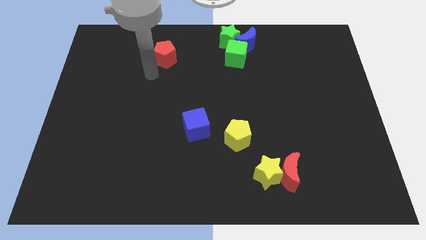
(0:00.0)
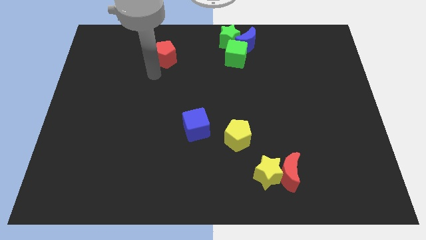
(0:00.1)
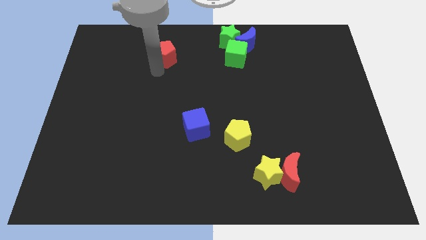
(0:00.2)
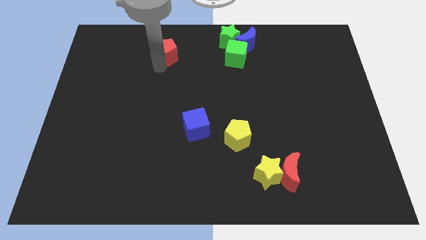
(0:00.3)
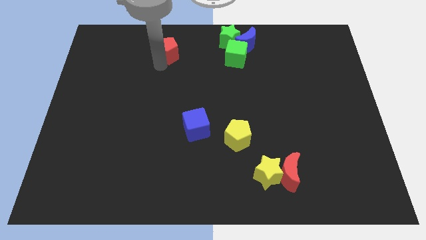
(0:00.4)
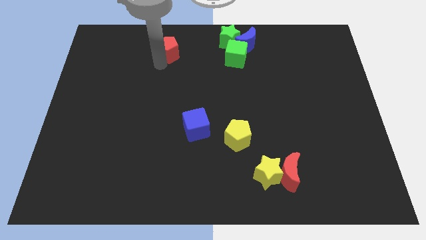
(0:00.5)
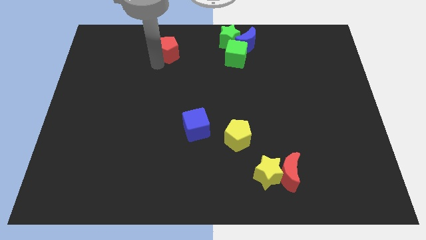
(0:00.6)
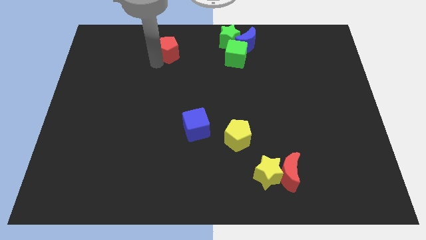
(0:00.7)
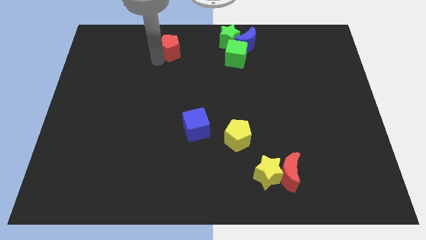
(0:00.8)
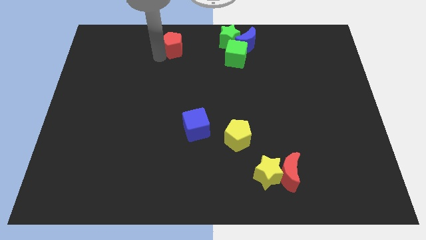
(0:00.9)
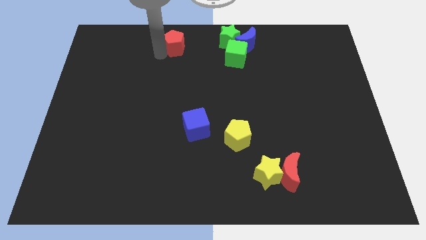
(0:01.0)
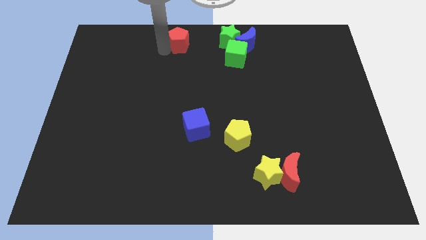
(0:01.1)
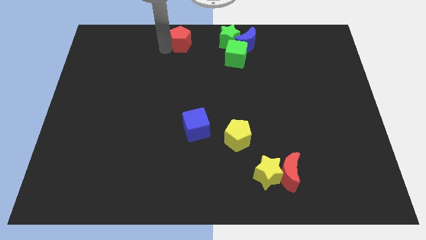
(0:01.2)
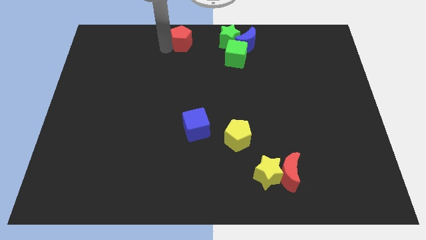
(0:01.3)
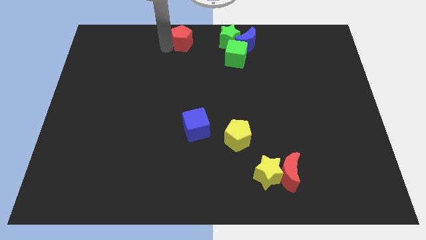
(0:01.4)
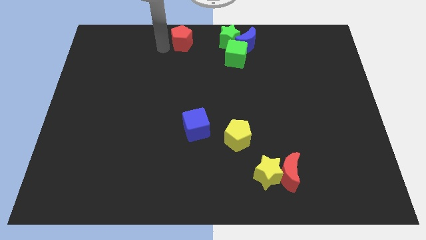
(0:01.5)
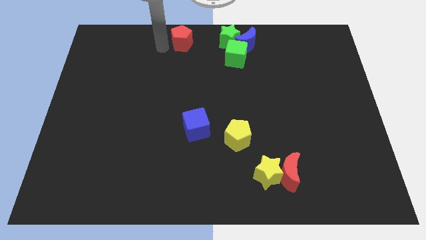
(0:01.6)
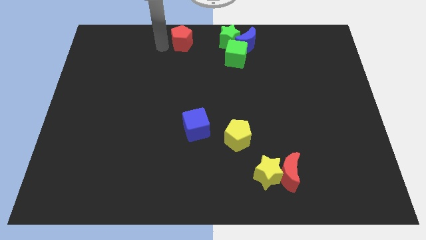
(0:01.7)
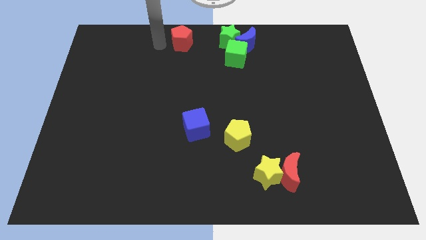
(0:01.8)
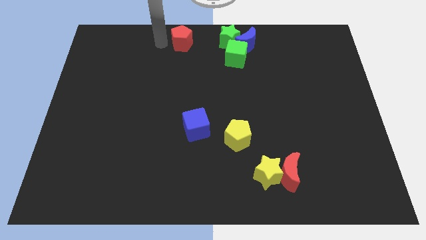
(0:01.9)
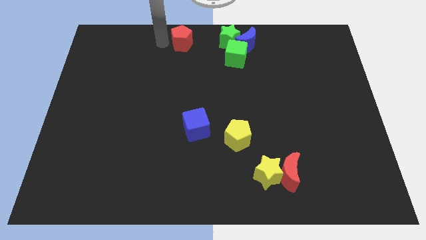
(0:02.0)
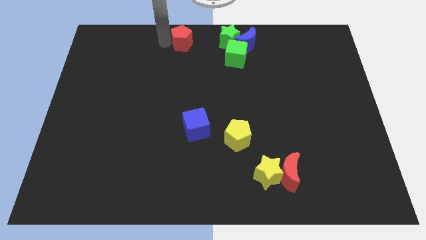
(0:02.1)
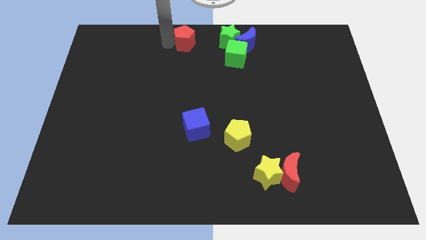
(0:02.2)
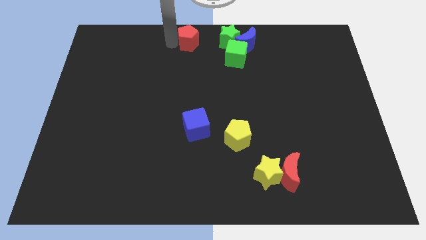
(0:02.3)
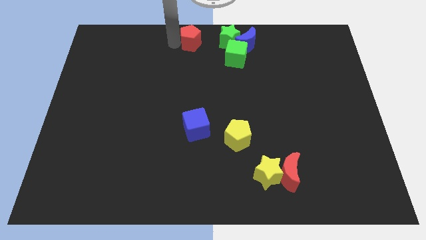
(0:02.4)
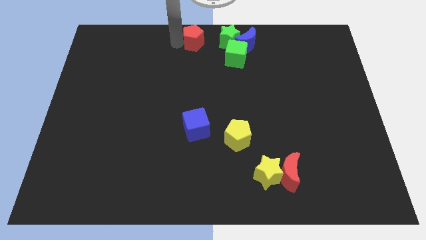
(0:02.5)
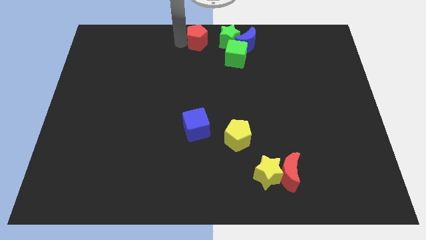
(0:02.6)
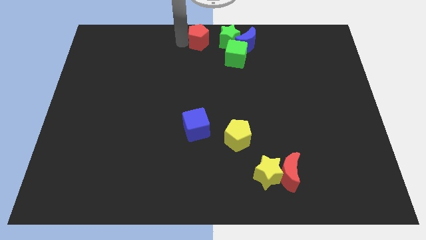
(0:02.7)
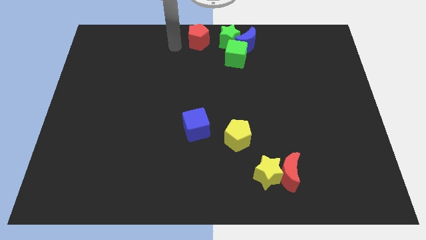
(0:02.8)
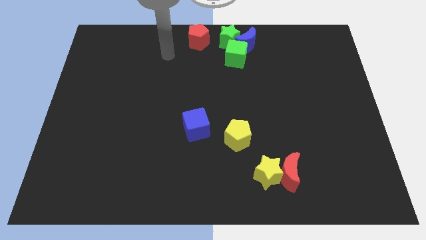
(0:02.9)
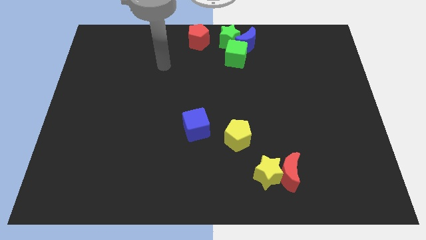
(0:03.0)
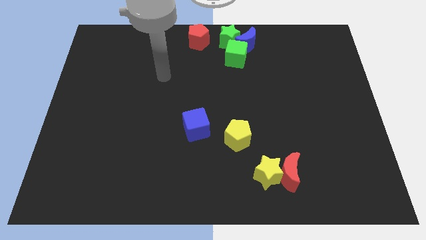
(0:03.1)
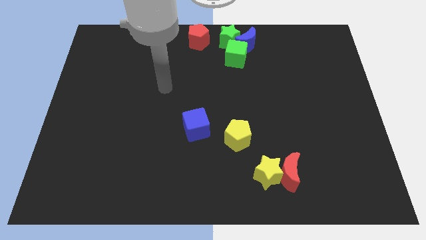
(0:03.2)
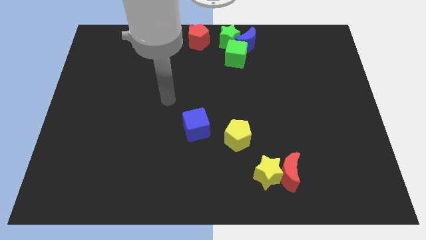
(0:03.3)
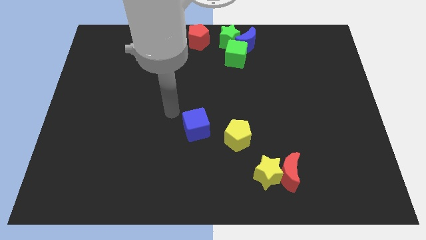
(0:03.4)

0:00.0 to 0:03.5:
place the red pentagon to the top center of the board

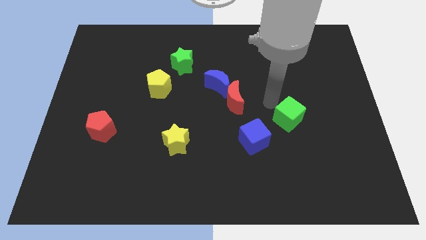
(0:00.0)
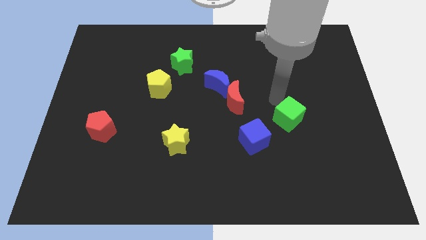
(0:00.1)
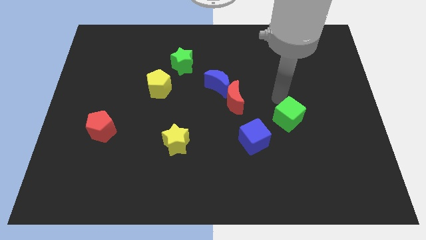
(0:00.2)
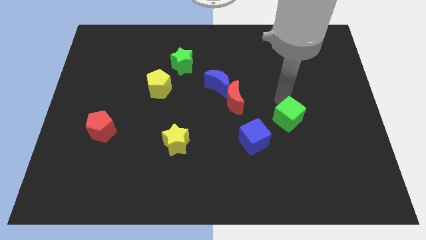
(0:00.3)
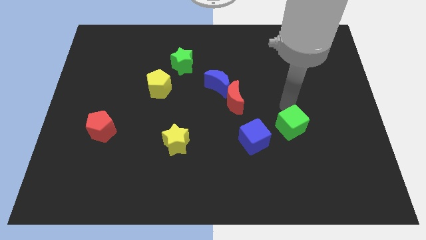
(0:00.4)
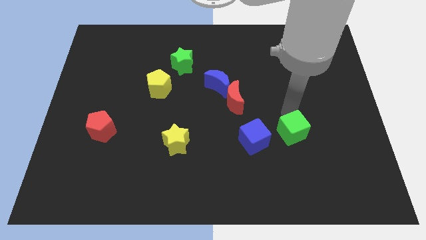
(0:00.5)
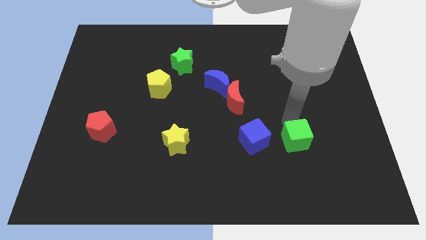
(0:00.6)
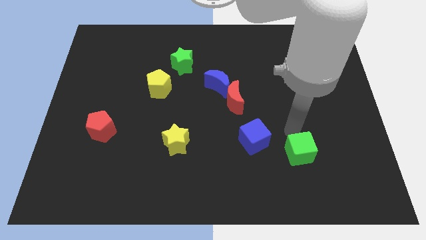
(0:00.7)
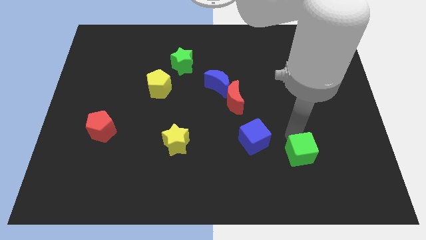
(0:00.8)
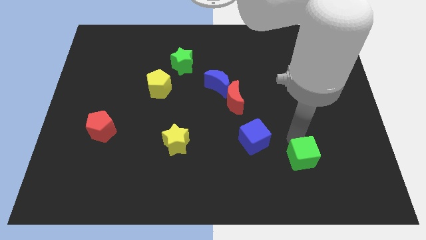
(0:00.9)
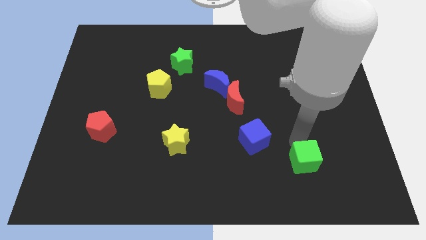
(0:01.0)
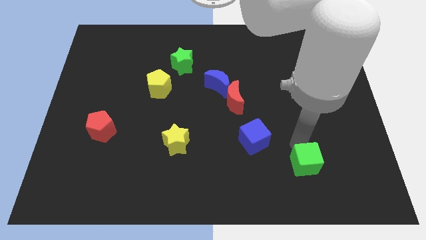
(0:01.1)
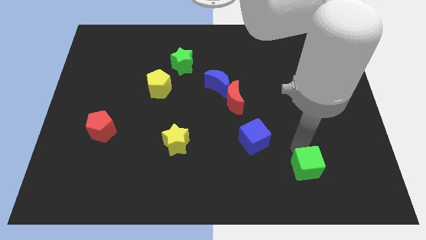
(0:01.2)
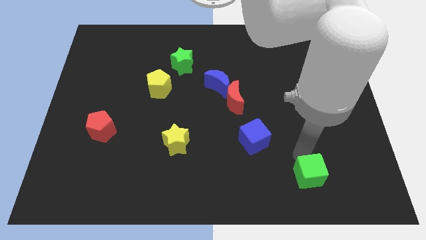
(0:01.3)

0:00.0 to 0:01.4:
push the green cube towards the bottom of the board

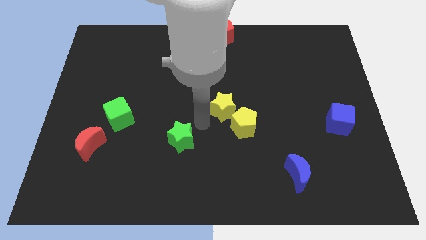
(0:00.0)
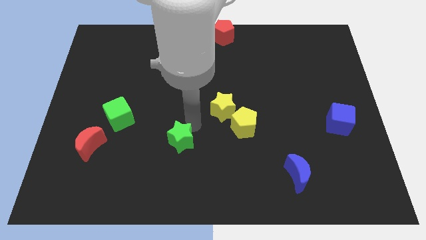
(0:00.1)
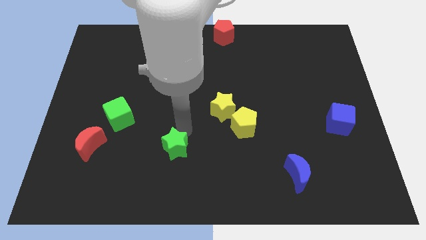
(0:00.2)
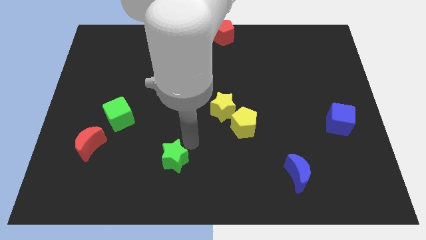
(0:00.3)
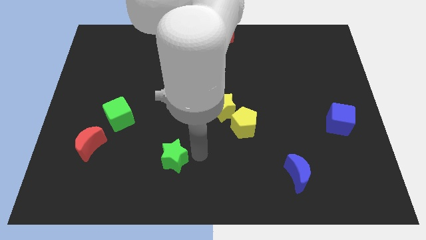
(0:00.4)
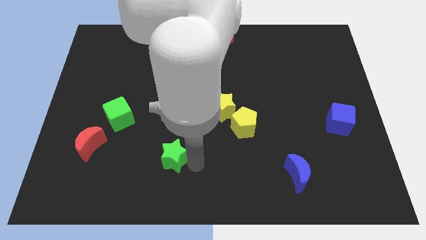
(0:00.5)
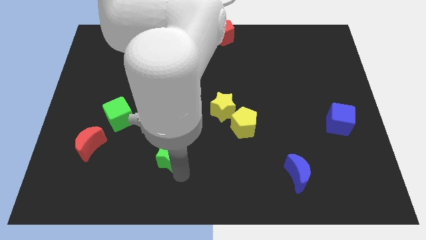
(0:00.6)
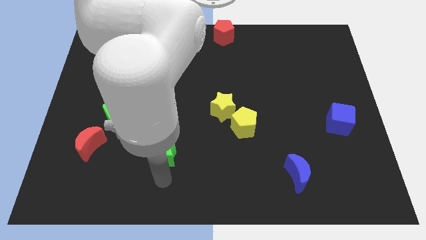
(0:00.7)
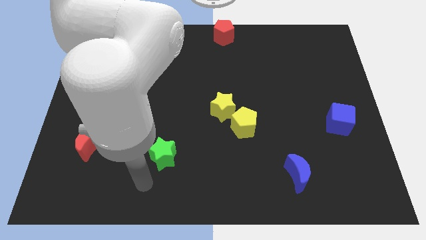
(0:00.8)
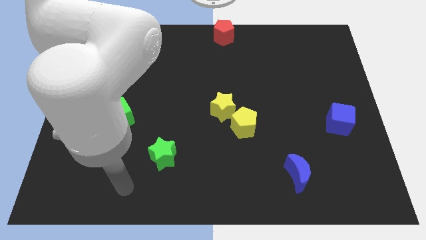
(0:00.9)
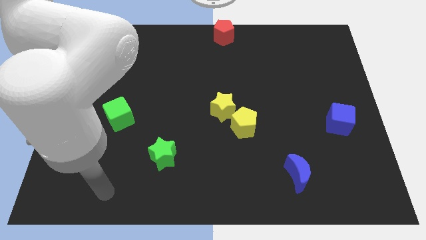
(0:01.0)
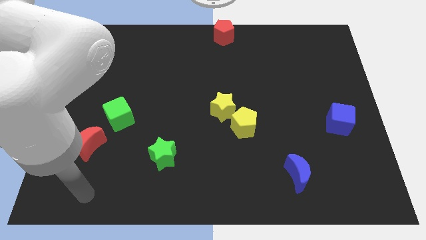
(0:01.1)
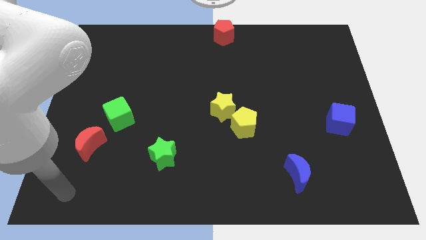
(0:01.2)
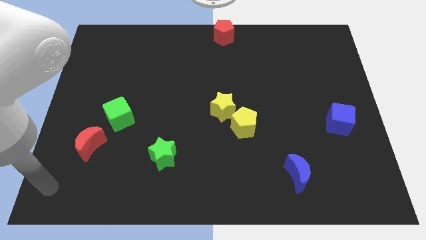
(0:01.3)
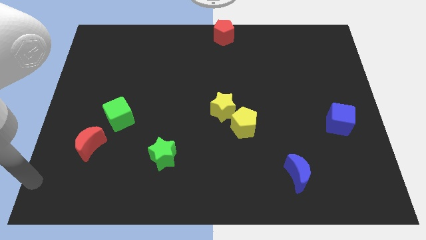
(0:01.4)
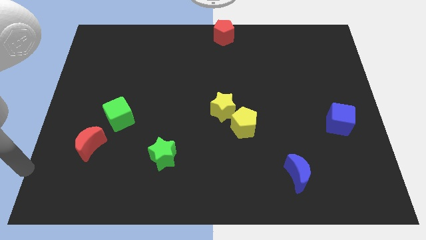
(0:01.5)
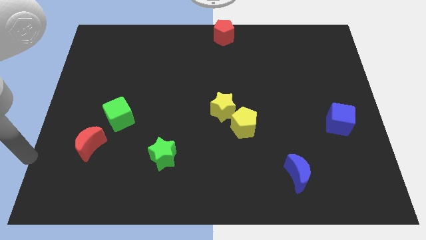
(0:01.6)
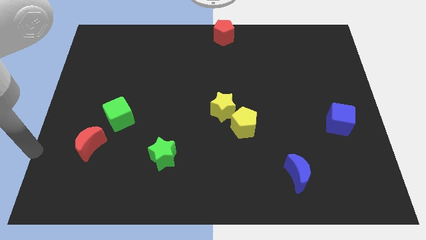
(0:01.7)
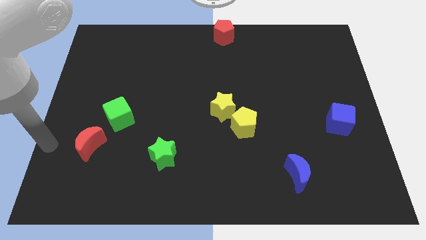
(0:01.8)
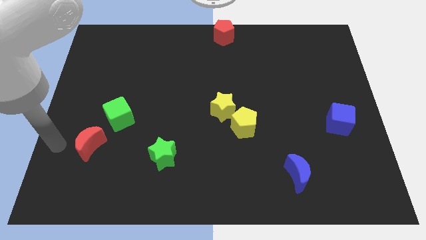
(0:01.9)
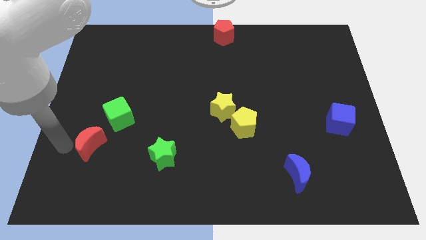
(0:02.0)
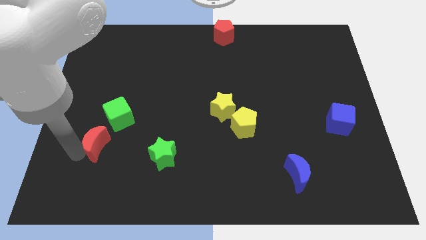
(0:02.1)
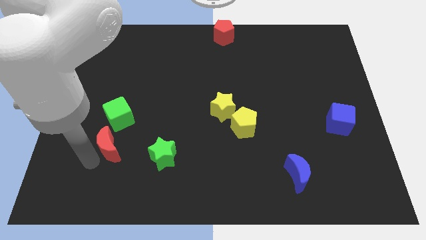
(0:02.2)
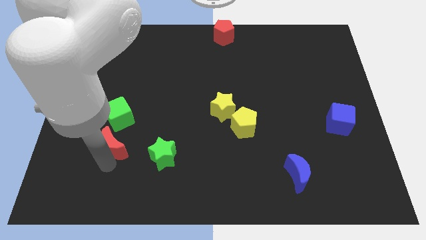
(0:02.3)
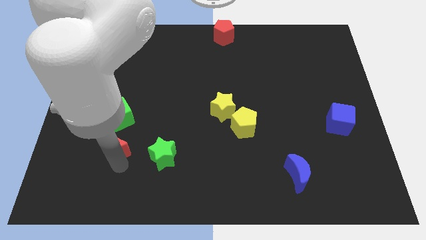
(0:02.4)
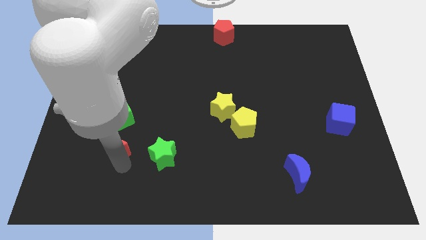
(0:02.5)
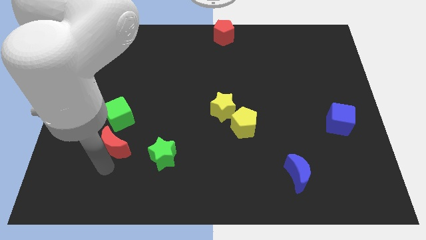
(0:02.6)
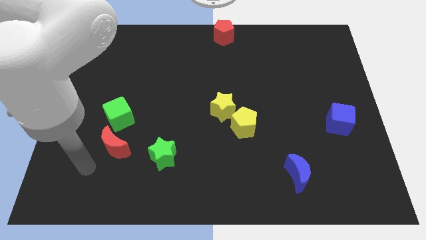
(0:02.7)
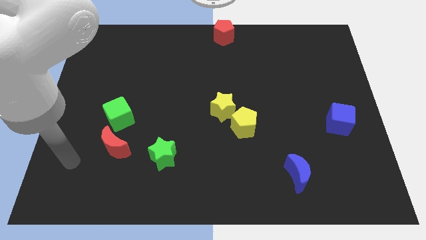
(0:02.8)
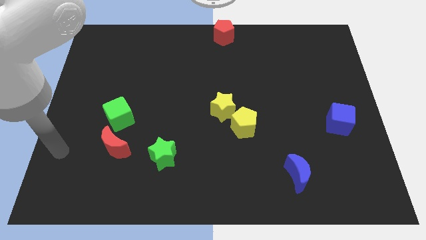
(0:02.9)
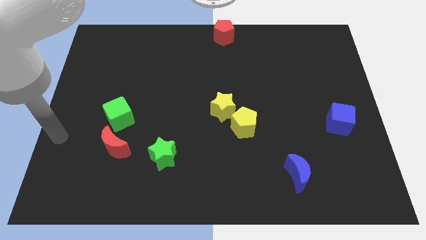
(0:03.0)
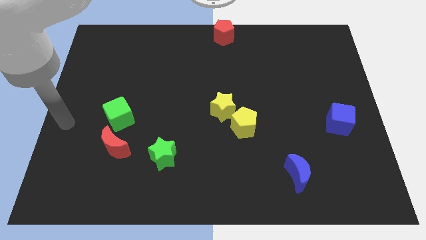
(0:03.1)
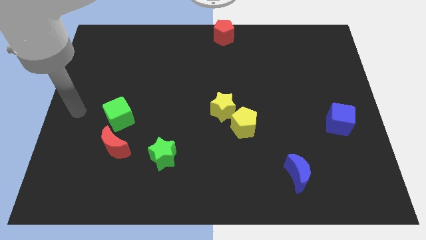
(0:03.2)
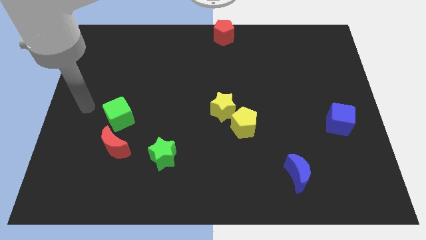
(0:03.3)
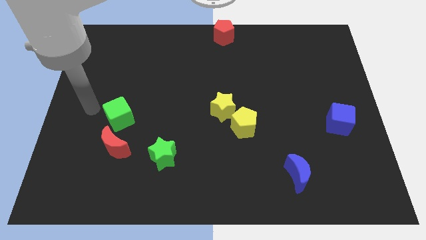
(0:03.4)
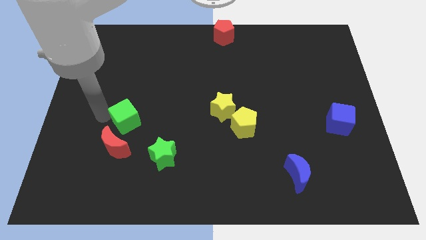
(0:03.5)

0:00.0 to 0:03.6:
place the green star and the red pentagon in a horizontal line

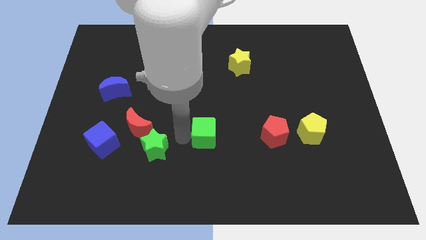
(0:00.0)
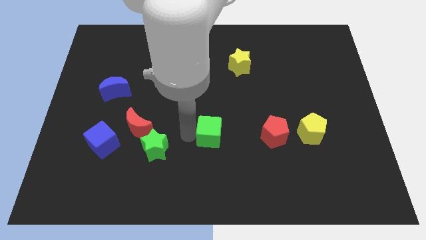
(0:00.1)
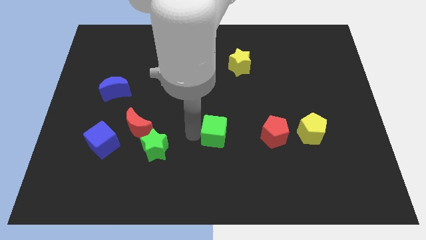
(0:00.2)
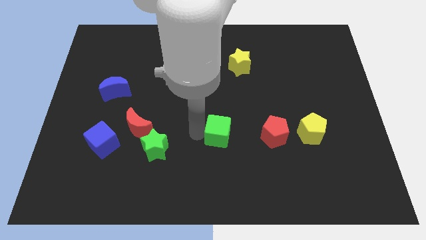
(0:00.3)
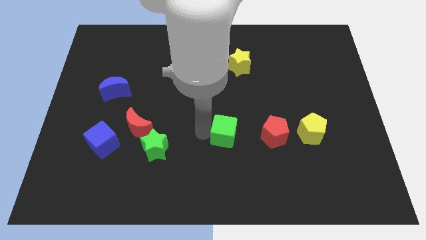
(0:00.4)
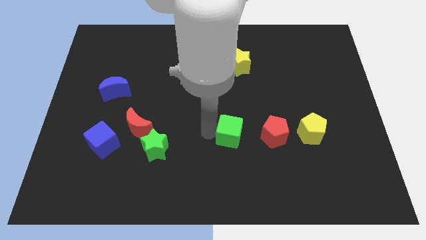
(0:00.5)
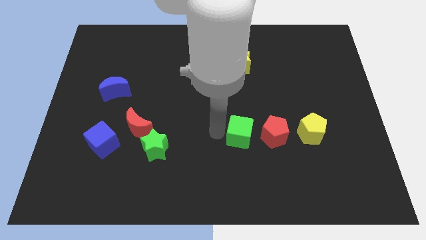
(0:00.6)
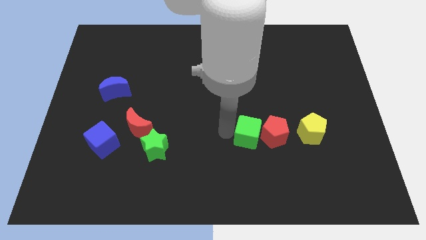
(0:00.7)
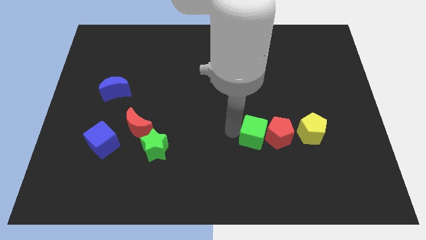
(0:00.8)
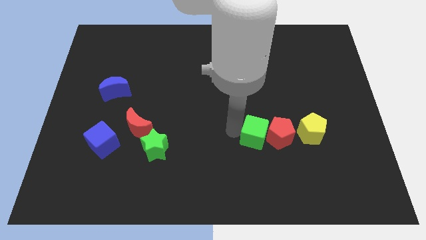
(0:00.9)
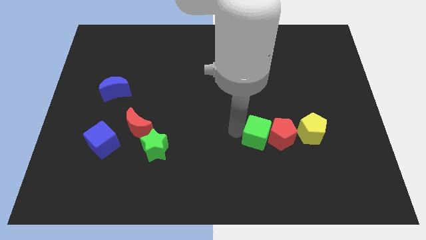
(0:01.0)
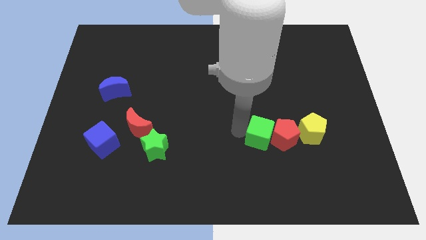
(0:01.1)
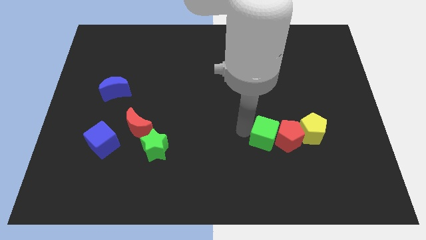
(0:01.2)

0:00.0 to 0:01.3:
push the green cube into the red pentagon from the left
